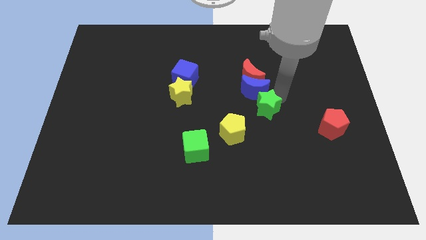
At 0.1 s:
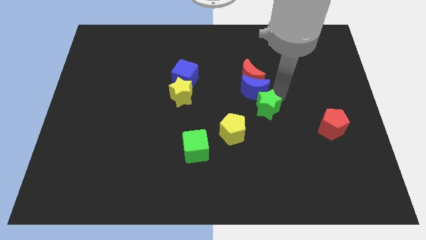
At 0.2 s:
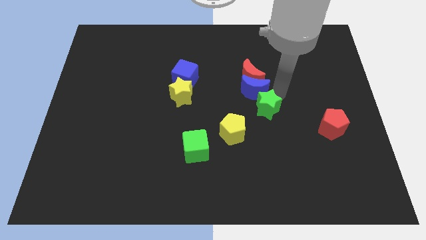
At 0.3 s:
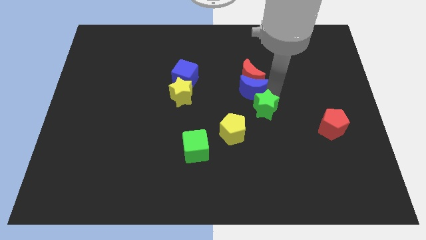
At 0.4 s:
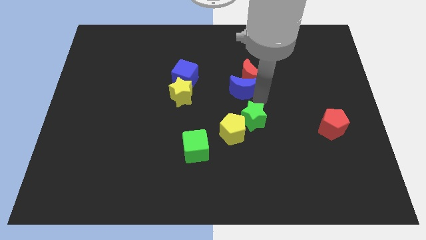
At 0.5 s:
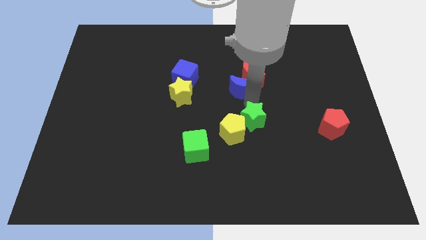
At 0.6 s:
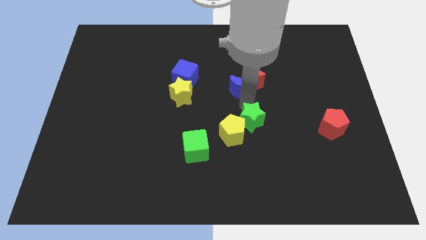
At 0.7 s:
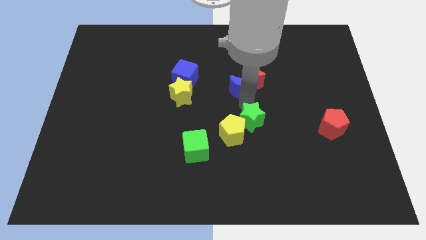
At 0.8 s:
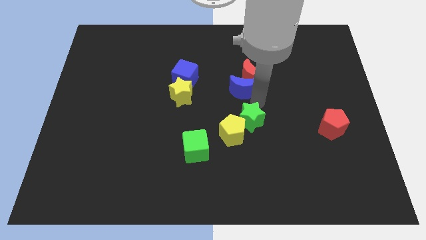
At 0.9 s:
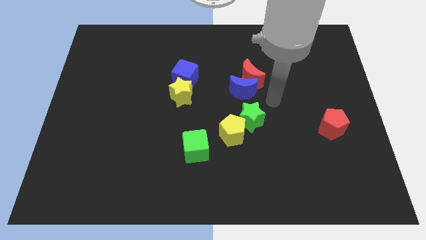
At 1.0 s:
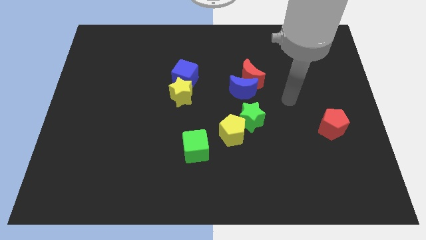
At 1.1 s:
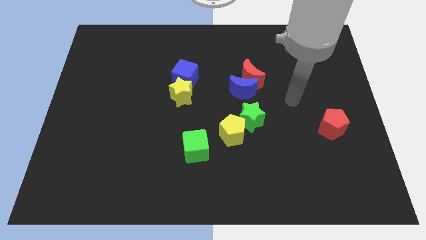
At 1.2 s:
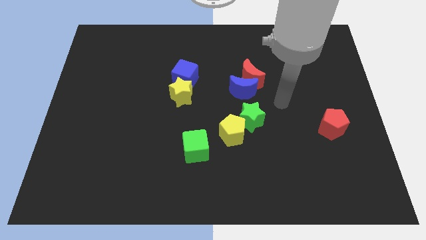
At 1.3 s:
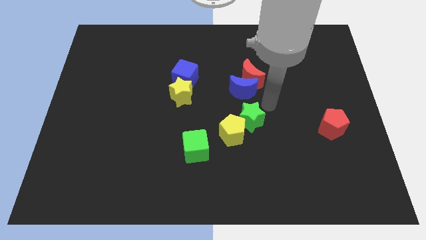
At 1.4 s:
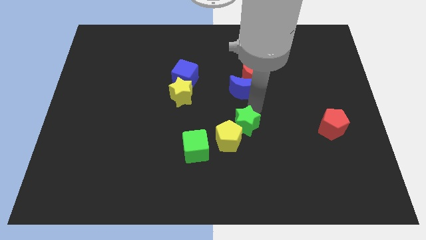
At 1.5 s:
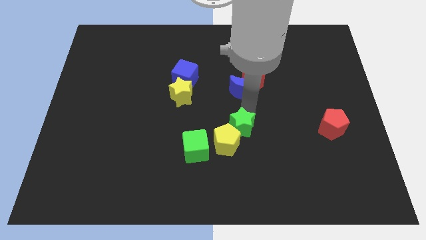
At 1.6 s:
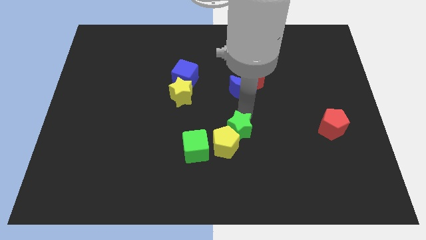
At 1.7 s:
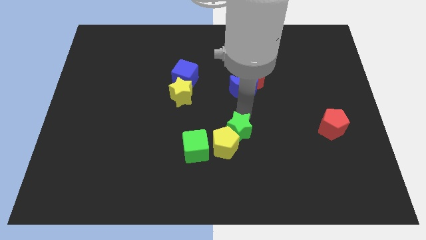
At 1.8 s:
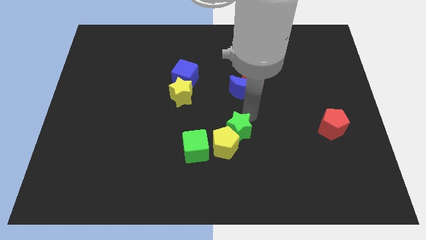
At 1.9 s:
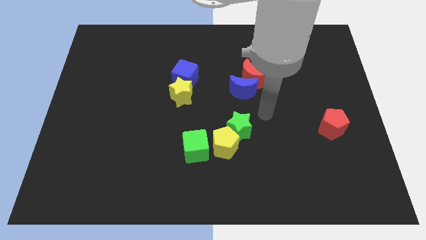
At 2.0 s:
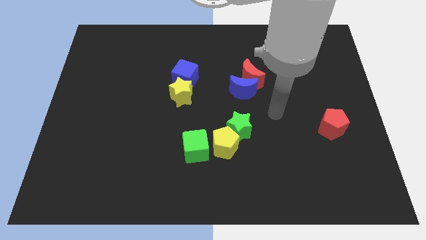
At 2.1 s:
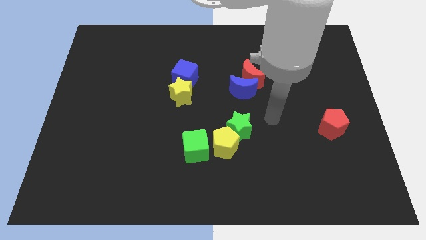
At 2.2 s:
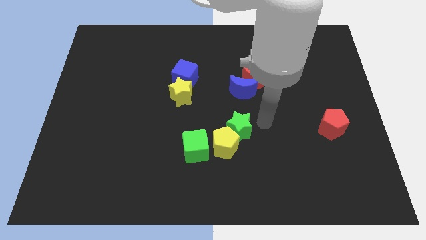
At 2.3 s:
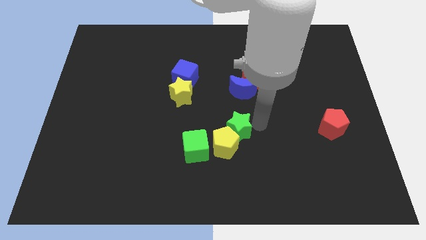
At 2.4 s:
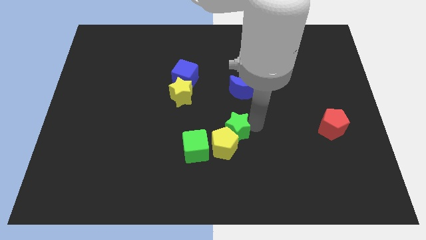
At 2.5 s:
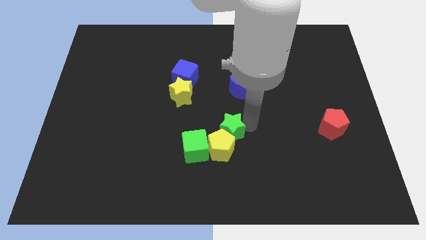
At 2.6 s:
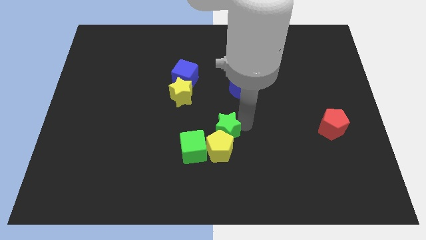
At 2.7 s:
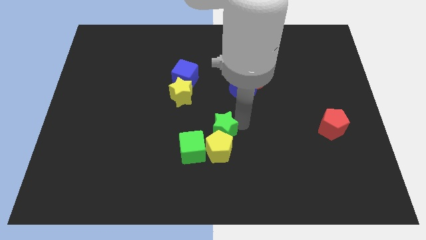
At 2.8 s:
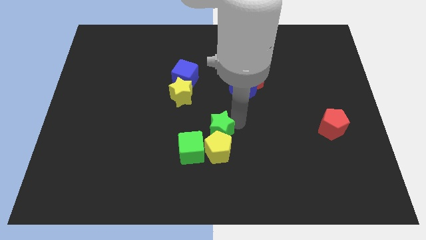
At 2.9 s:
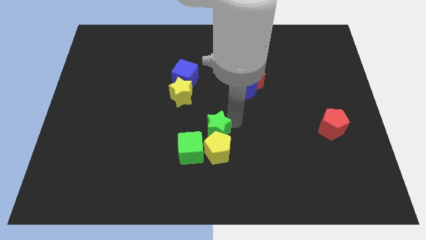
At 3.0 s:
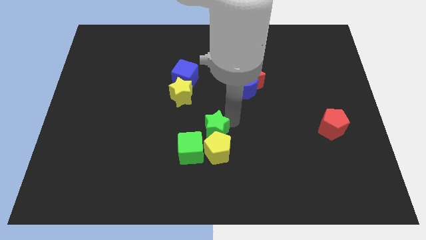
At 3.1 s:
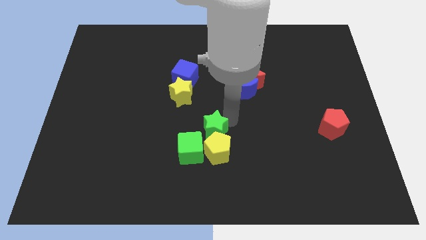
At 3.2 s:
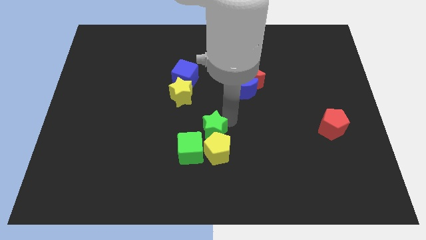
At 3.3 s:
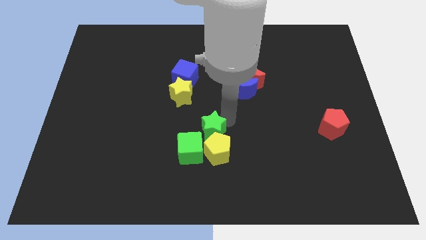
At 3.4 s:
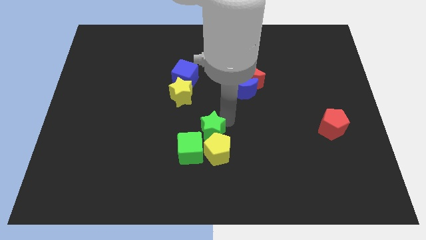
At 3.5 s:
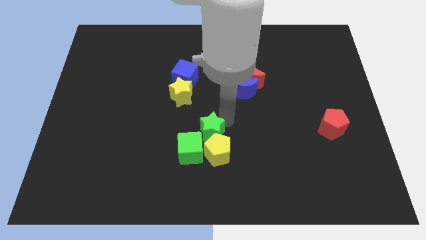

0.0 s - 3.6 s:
push the green star to the top of the yellow pentagon

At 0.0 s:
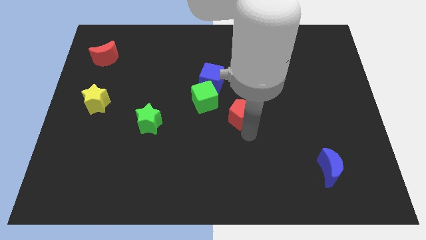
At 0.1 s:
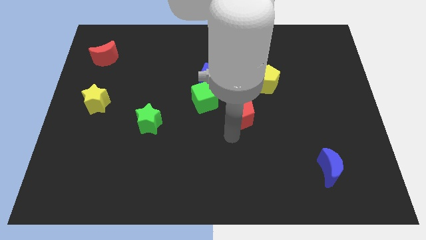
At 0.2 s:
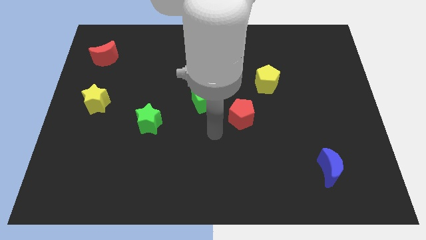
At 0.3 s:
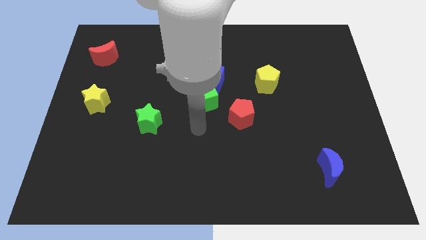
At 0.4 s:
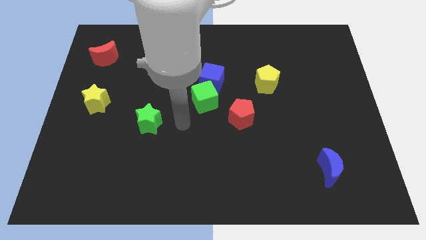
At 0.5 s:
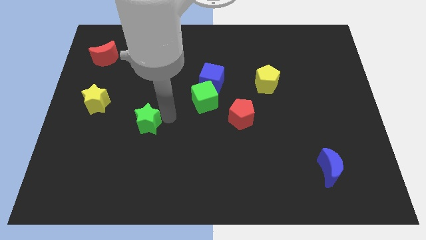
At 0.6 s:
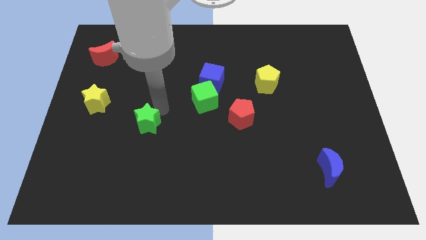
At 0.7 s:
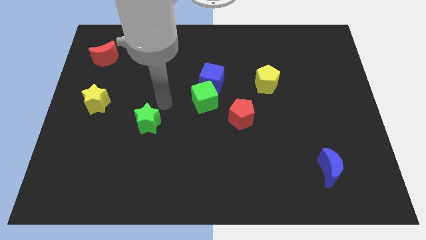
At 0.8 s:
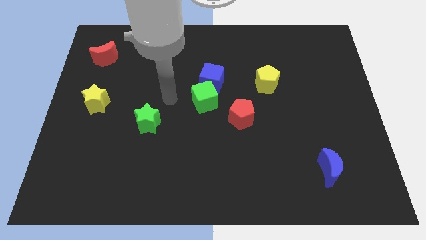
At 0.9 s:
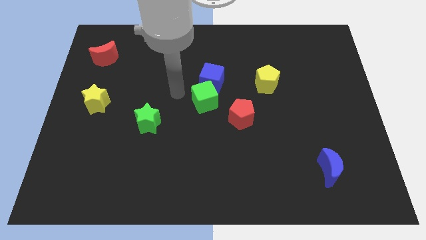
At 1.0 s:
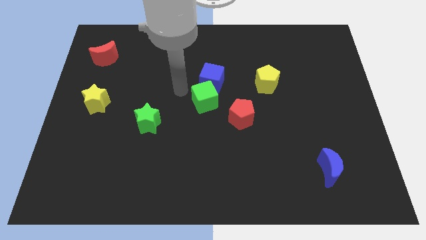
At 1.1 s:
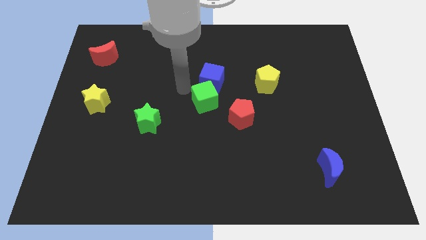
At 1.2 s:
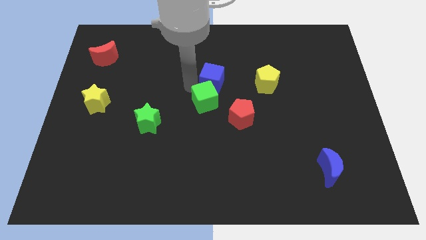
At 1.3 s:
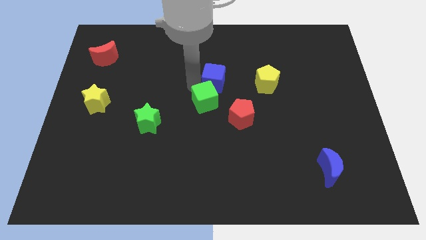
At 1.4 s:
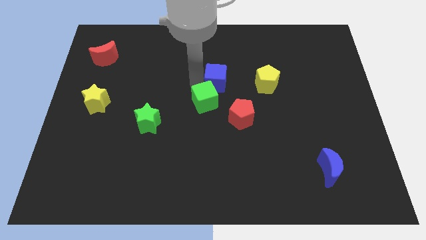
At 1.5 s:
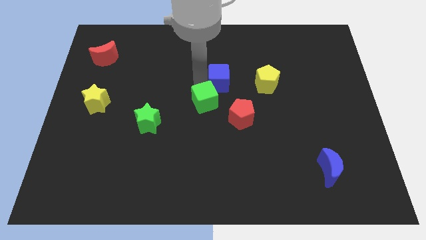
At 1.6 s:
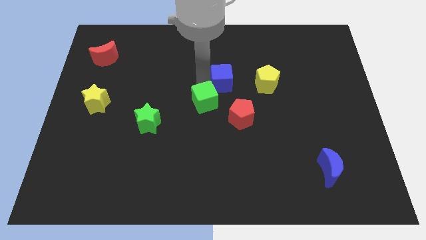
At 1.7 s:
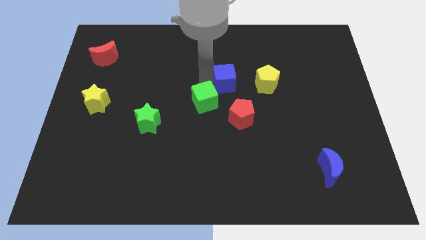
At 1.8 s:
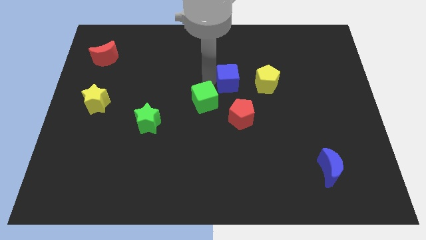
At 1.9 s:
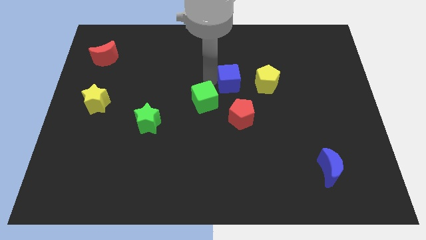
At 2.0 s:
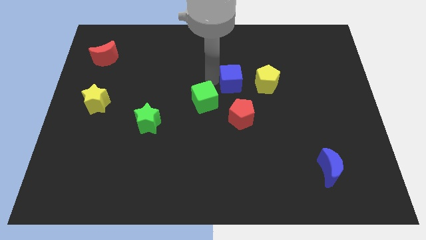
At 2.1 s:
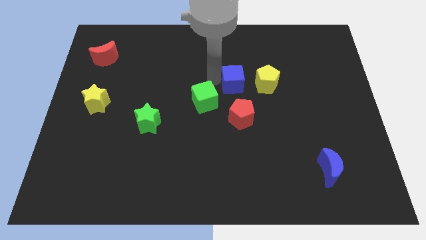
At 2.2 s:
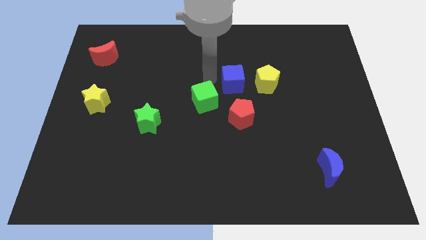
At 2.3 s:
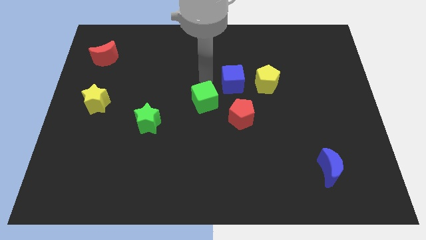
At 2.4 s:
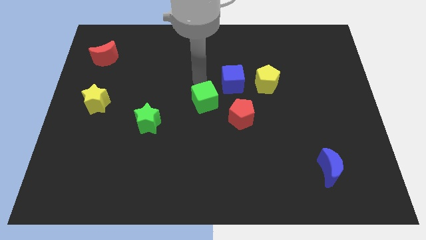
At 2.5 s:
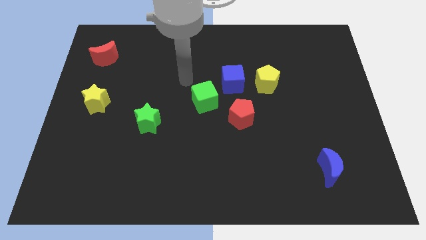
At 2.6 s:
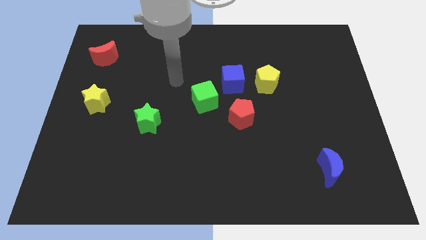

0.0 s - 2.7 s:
place the blue cube above the red pentagon

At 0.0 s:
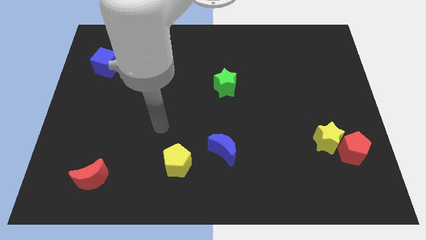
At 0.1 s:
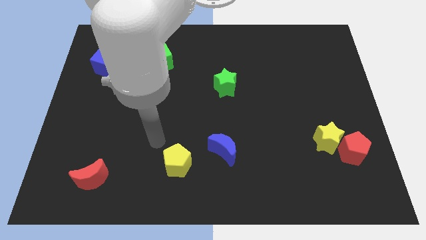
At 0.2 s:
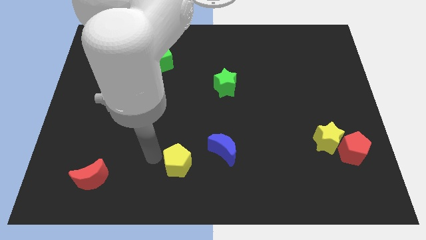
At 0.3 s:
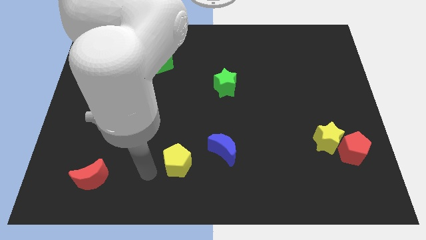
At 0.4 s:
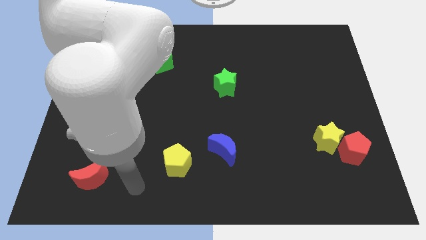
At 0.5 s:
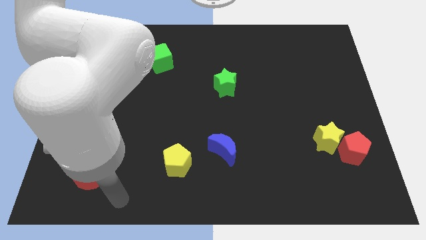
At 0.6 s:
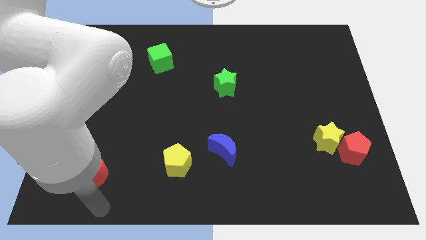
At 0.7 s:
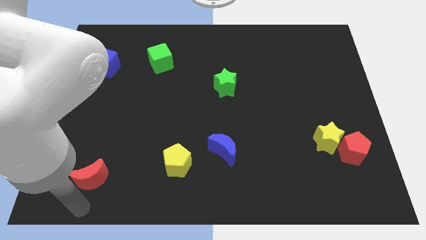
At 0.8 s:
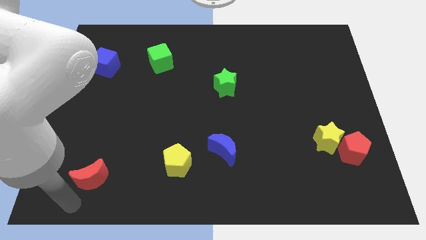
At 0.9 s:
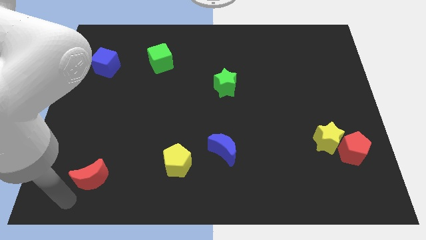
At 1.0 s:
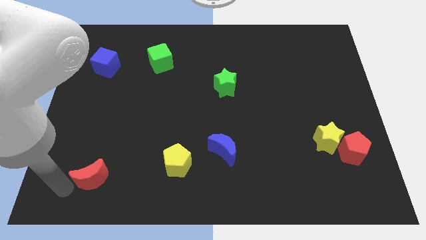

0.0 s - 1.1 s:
point the arm at the red crescent

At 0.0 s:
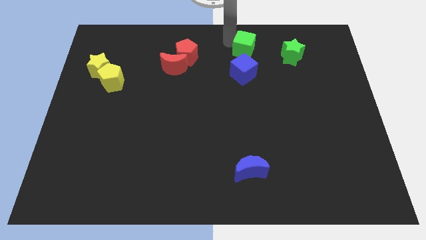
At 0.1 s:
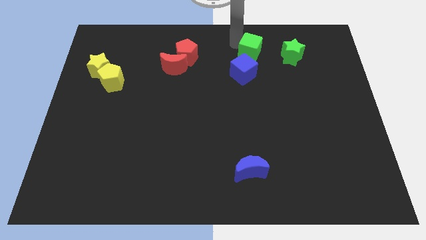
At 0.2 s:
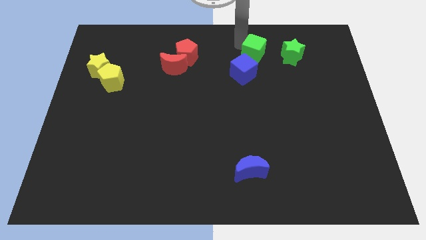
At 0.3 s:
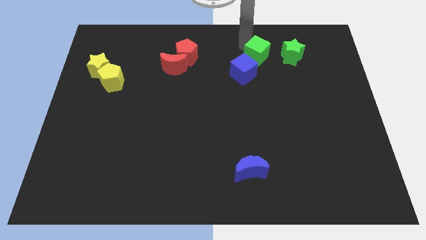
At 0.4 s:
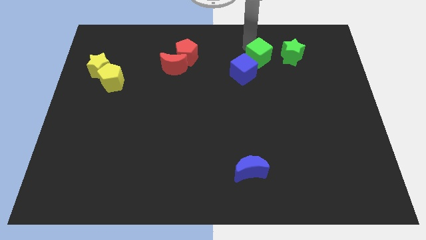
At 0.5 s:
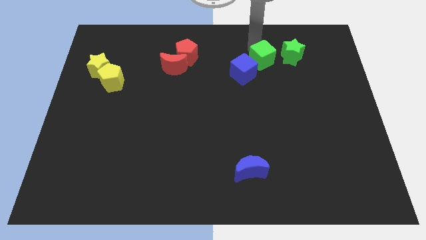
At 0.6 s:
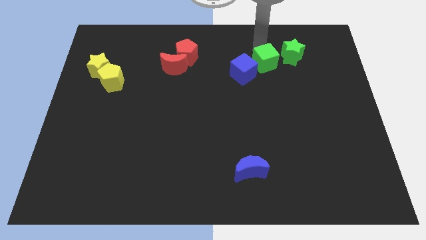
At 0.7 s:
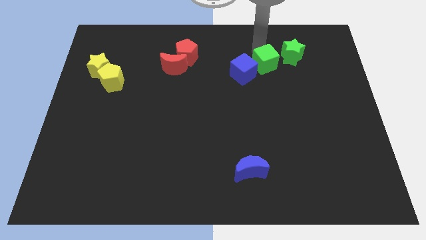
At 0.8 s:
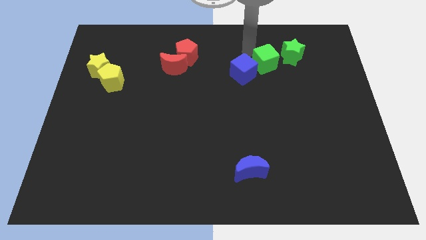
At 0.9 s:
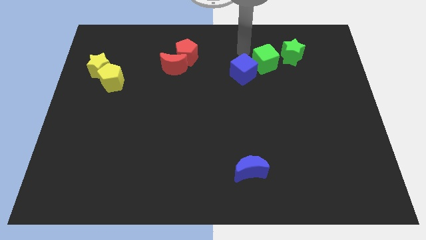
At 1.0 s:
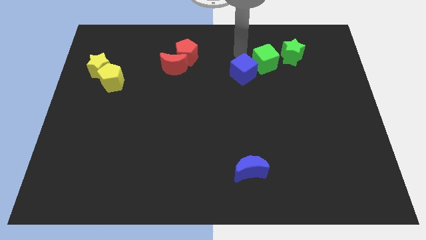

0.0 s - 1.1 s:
place the green cube in between the green star and blue cube

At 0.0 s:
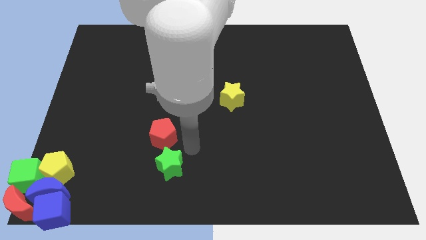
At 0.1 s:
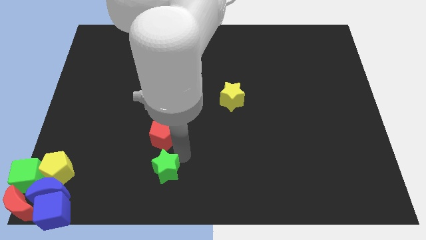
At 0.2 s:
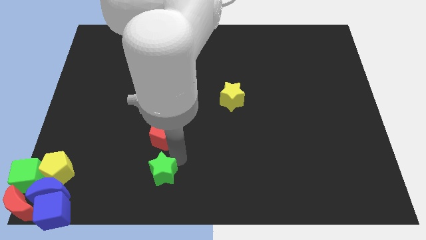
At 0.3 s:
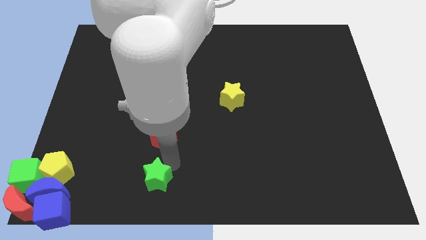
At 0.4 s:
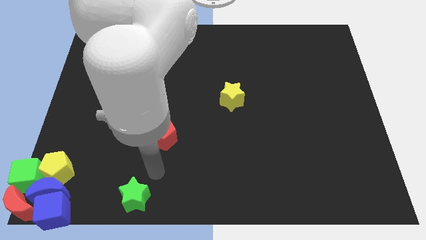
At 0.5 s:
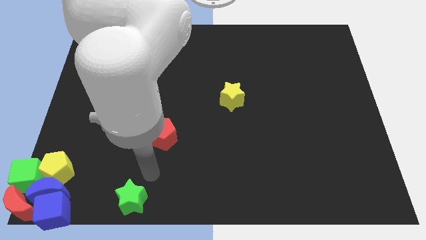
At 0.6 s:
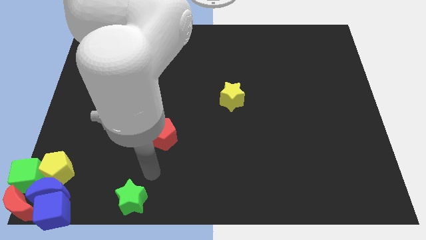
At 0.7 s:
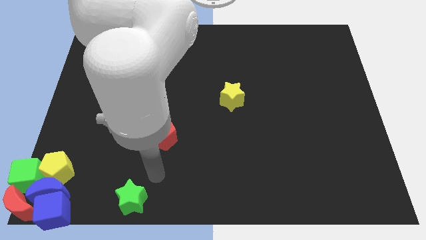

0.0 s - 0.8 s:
put the green star to the right of the group of blocks
